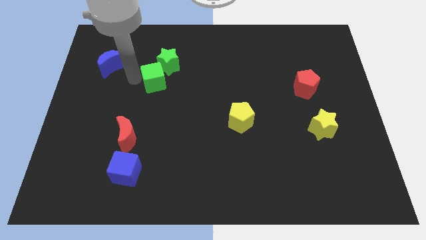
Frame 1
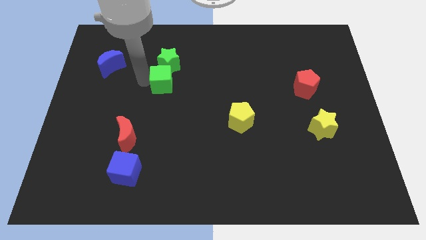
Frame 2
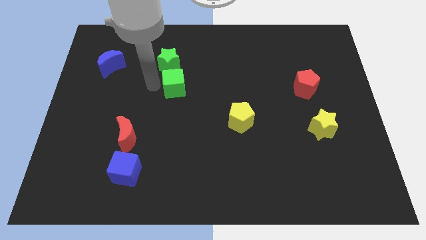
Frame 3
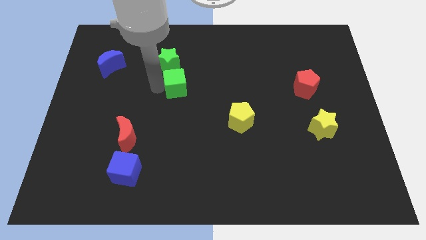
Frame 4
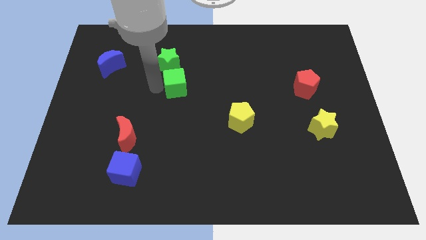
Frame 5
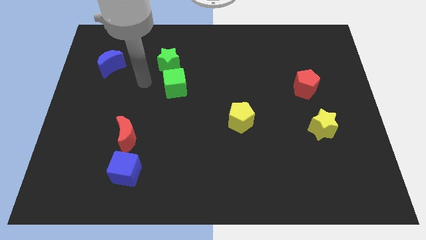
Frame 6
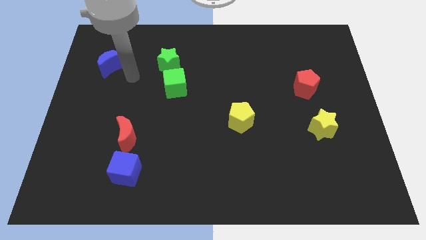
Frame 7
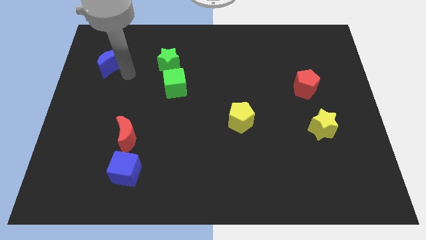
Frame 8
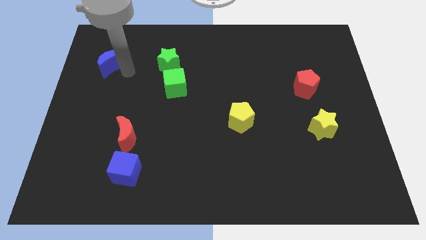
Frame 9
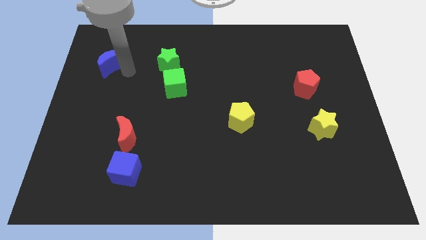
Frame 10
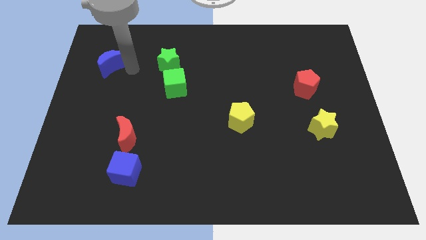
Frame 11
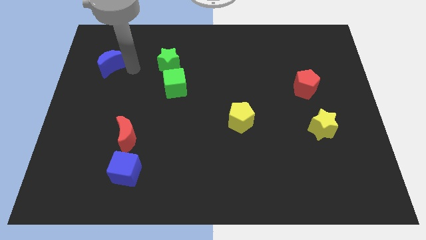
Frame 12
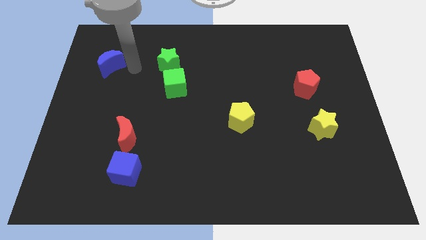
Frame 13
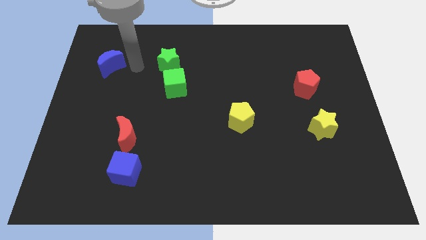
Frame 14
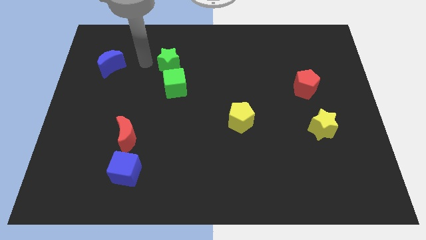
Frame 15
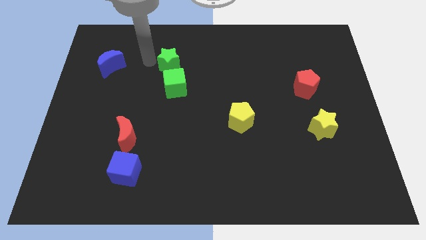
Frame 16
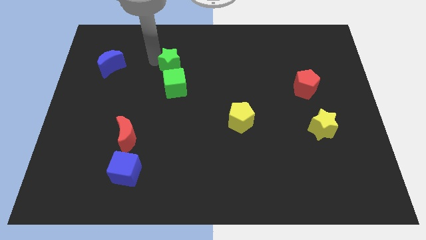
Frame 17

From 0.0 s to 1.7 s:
place the green cube below the green star

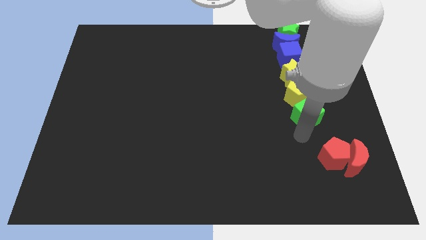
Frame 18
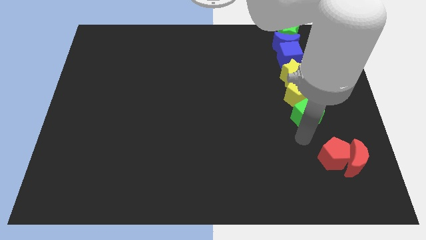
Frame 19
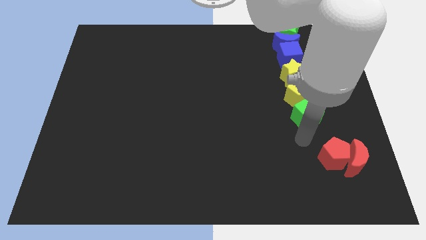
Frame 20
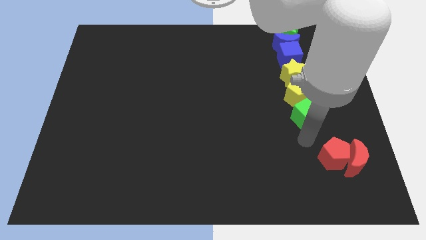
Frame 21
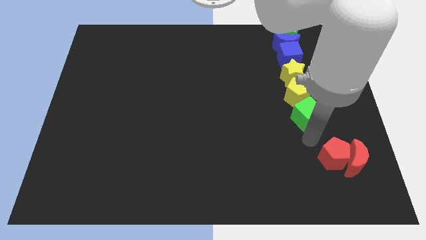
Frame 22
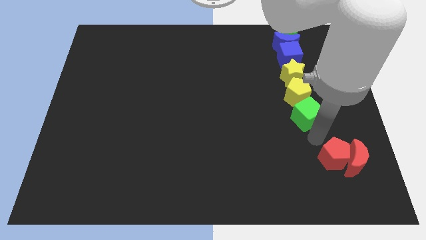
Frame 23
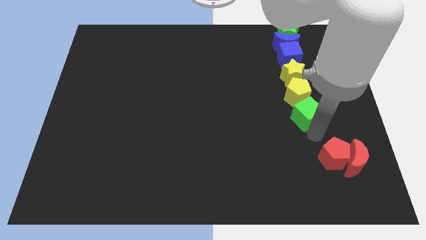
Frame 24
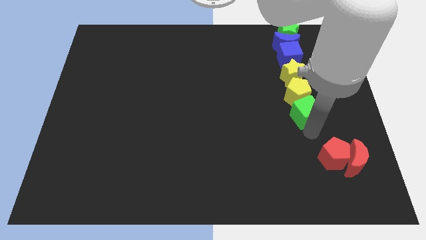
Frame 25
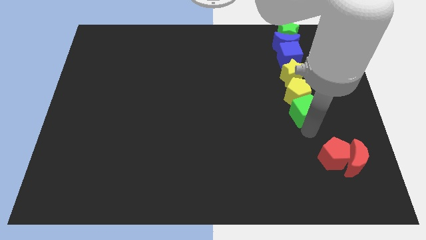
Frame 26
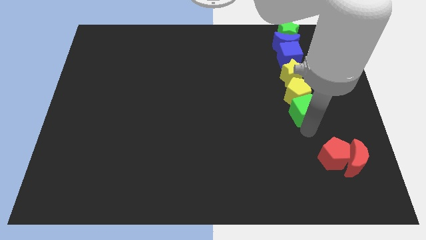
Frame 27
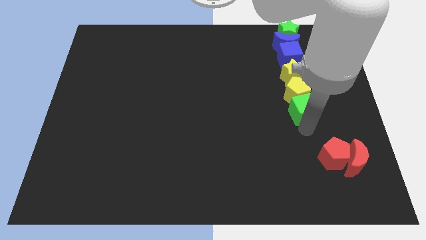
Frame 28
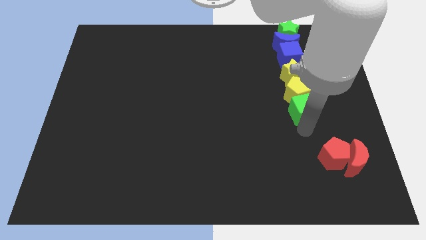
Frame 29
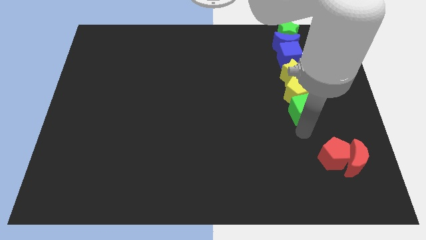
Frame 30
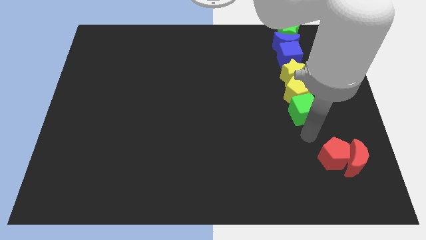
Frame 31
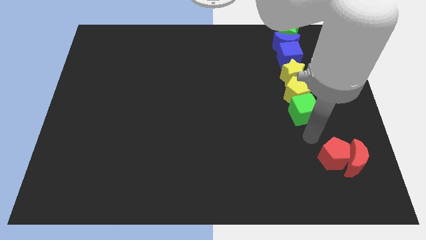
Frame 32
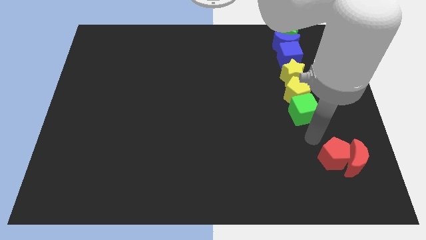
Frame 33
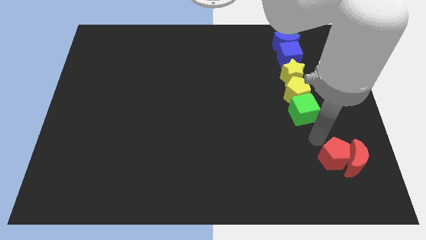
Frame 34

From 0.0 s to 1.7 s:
slide the green cube below to the yellow pentagon

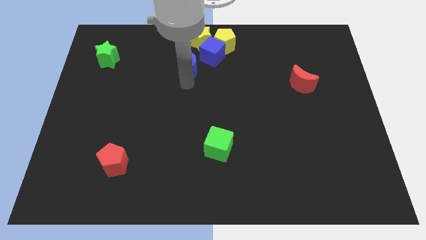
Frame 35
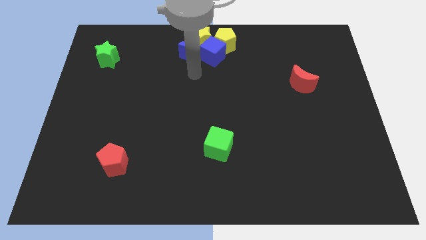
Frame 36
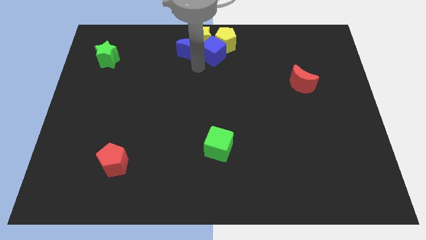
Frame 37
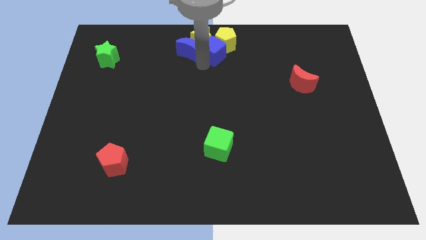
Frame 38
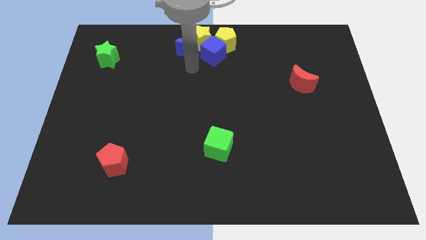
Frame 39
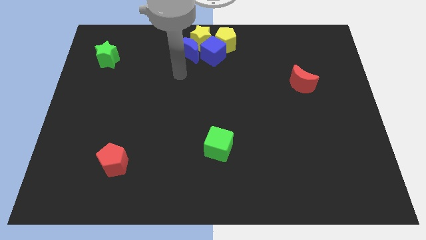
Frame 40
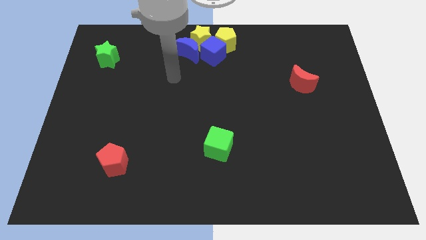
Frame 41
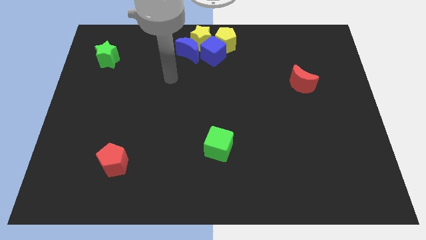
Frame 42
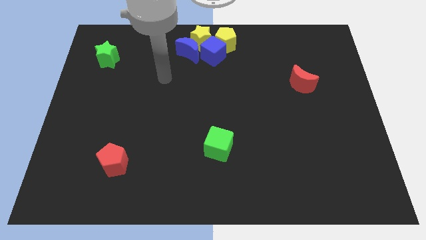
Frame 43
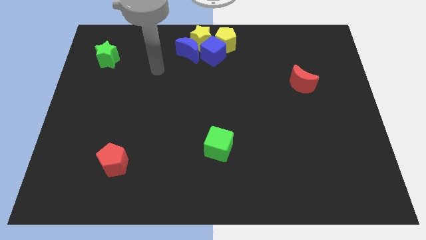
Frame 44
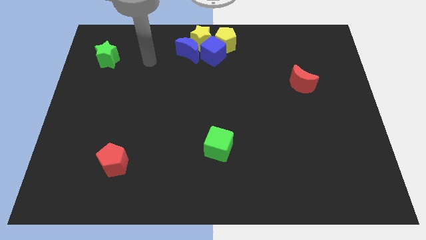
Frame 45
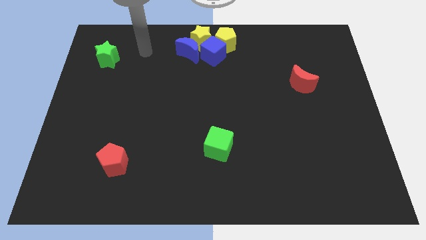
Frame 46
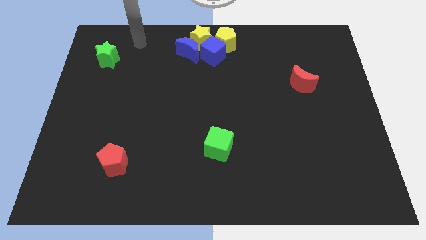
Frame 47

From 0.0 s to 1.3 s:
move the blue crescent to the left side of the blue cube

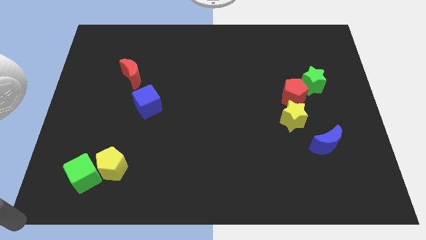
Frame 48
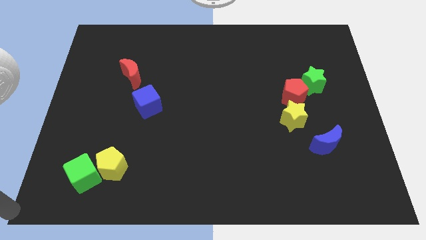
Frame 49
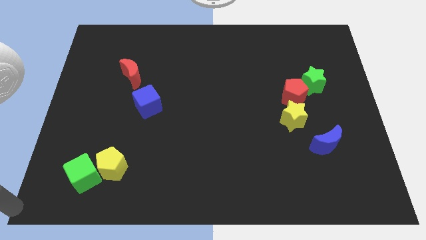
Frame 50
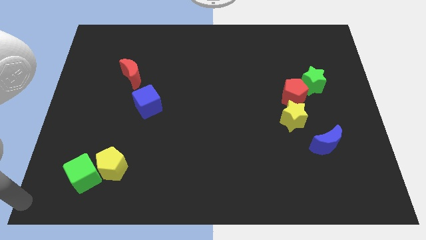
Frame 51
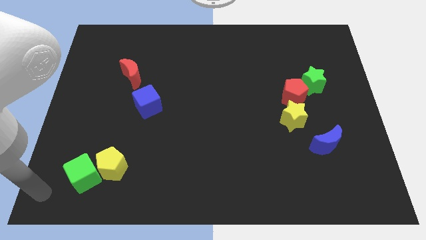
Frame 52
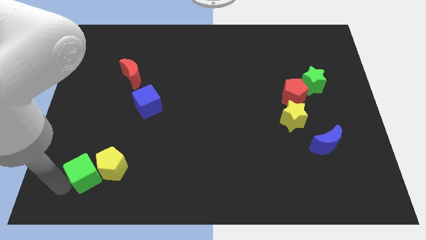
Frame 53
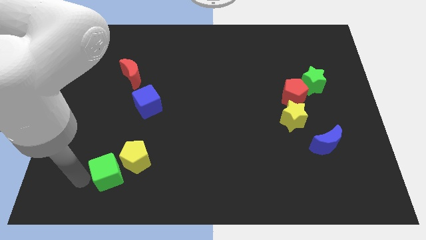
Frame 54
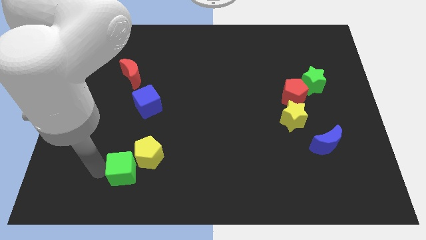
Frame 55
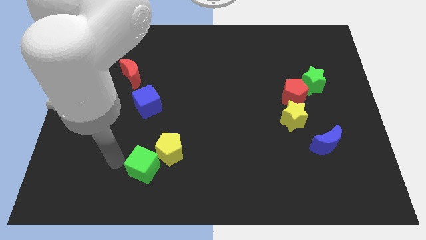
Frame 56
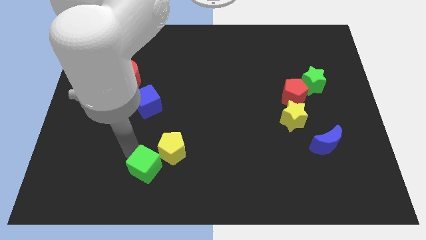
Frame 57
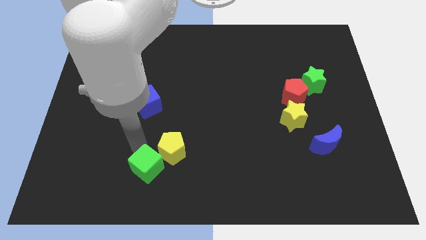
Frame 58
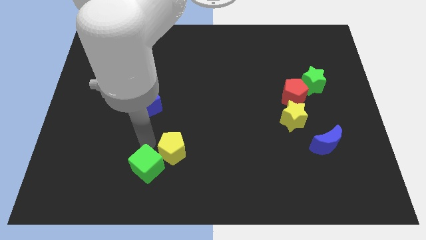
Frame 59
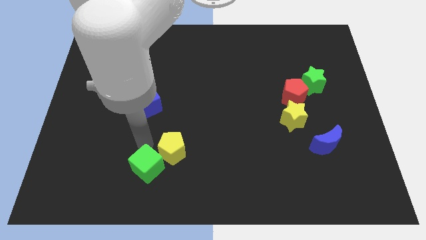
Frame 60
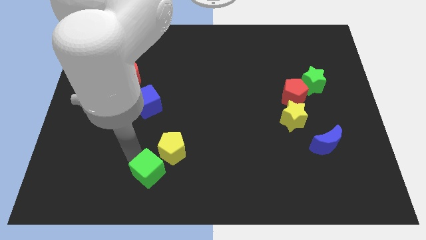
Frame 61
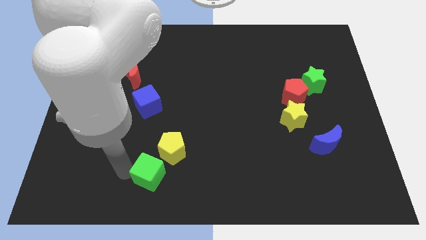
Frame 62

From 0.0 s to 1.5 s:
push the green cube into the yellow pentagon

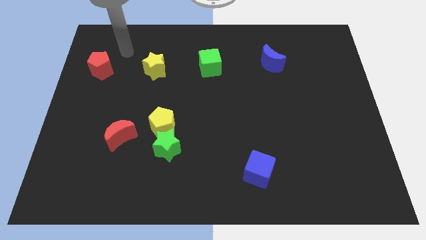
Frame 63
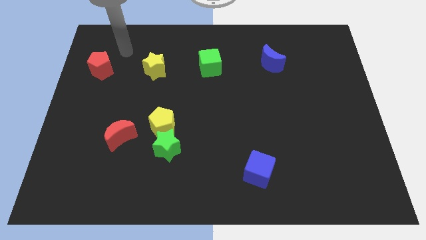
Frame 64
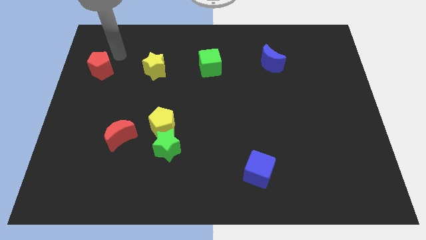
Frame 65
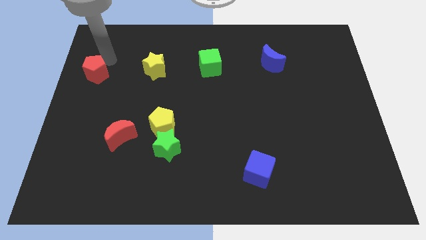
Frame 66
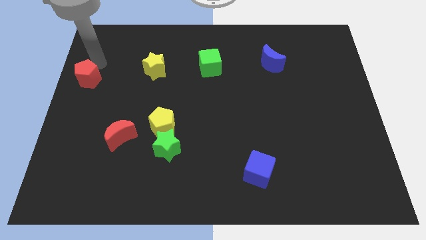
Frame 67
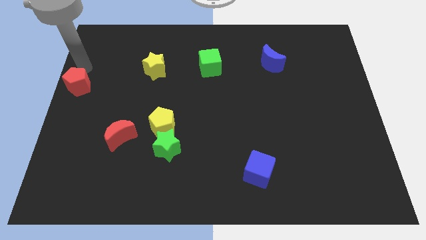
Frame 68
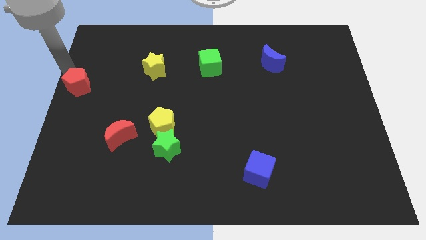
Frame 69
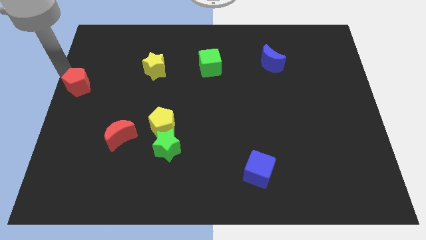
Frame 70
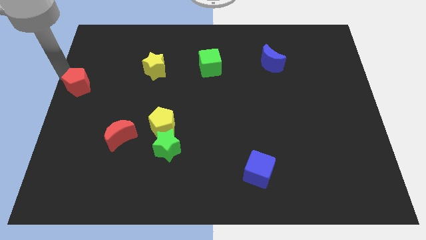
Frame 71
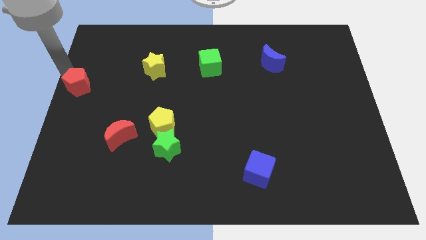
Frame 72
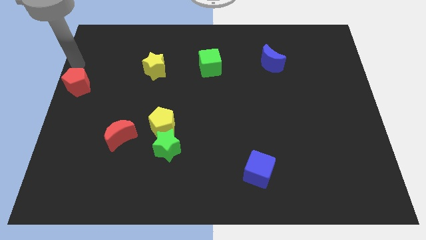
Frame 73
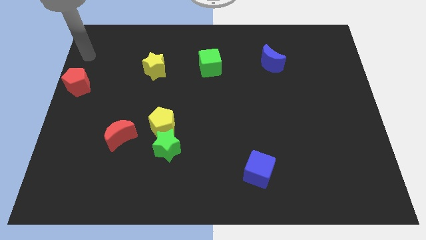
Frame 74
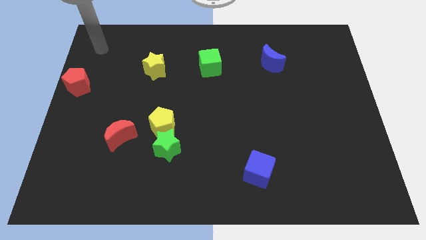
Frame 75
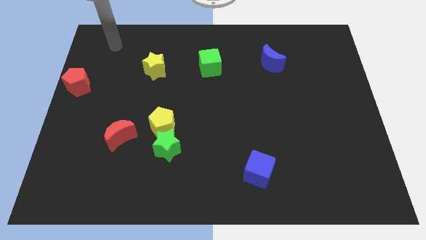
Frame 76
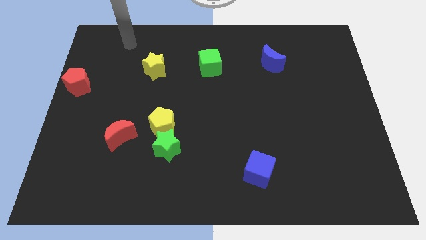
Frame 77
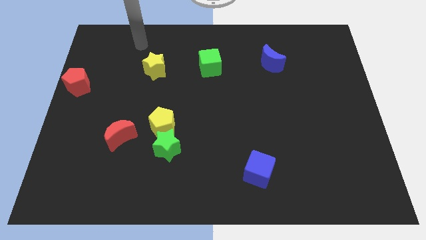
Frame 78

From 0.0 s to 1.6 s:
move the red pentagon to the middle left

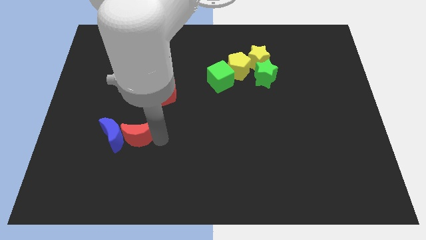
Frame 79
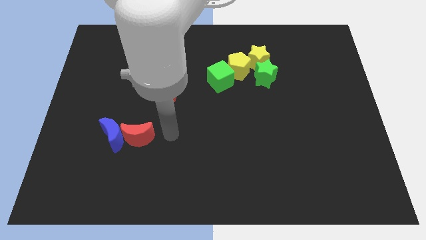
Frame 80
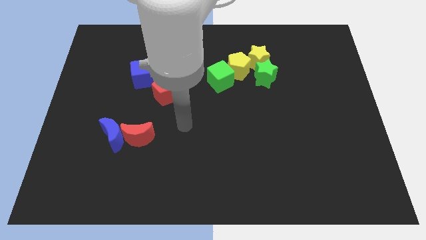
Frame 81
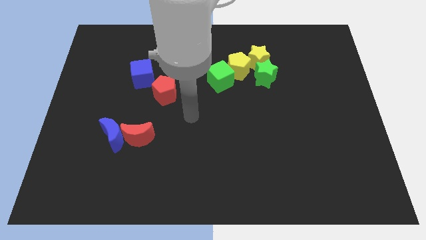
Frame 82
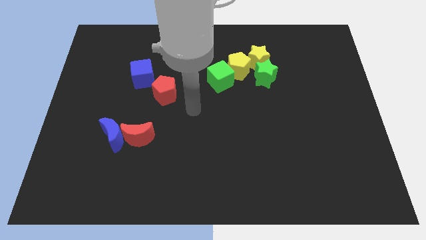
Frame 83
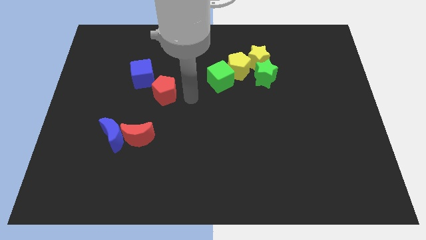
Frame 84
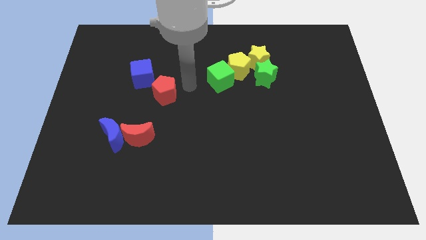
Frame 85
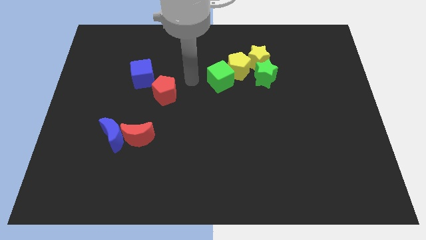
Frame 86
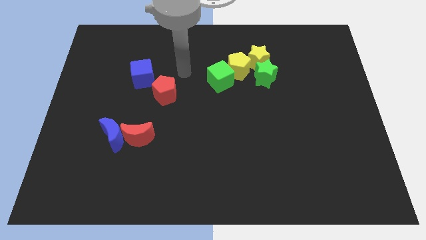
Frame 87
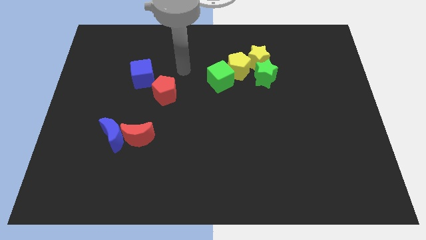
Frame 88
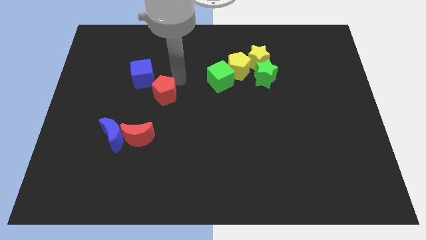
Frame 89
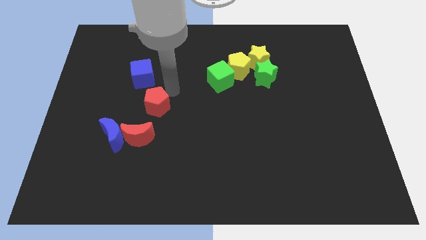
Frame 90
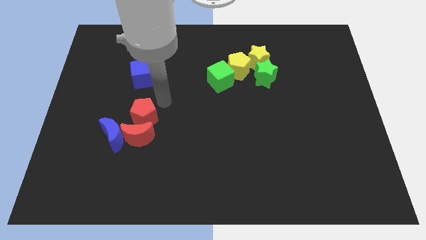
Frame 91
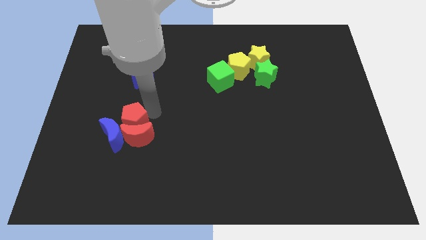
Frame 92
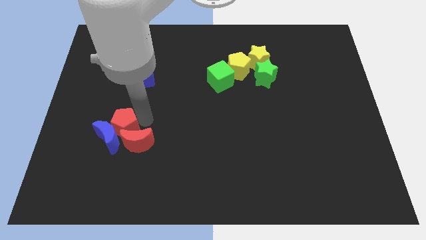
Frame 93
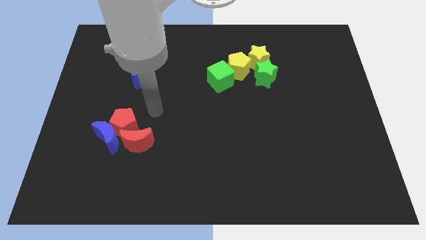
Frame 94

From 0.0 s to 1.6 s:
move the red pentagon into the group of blocks
